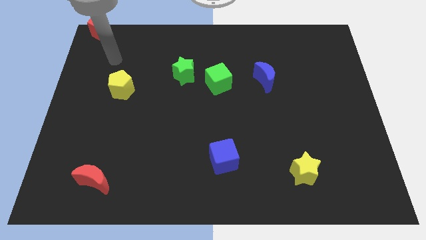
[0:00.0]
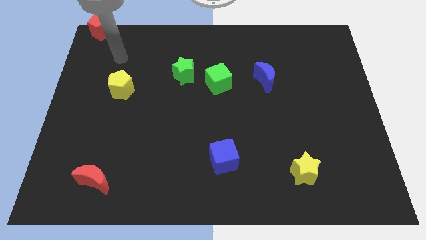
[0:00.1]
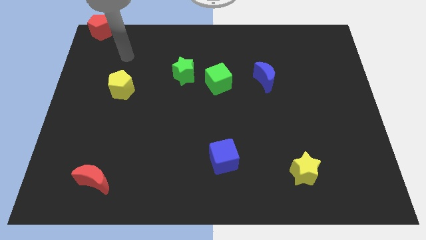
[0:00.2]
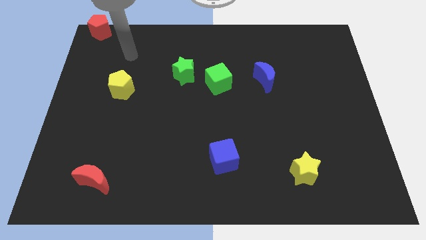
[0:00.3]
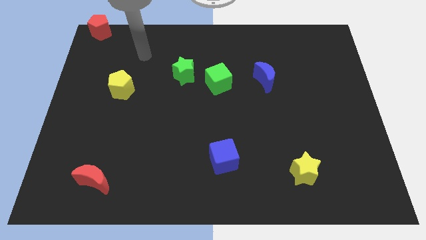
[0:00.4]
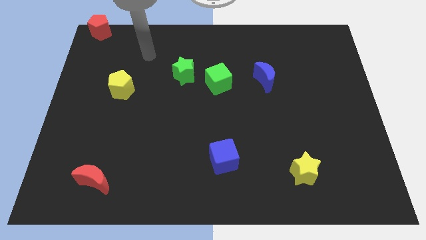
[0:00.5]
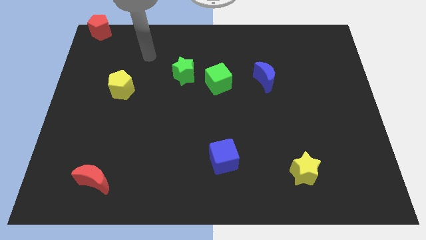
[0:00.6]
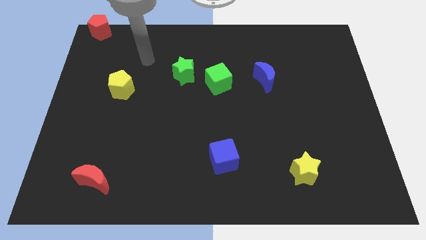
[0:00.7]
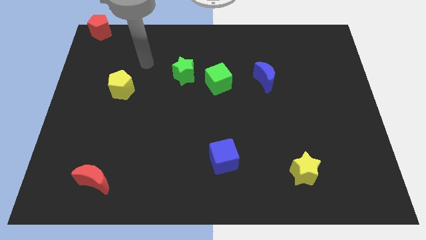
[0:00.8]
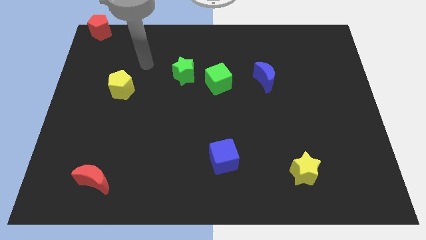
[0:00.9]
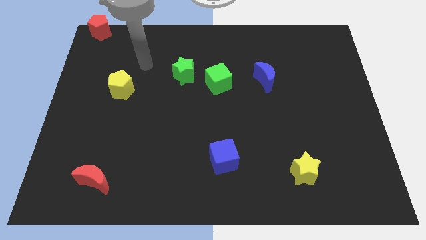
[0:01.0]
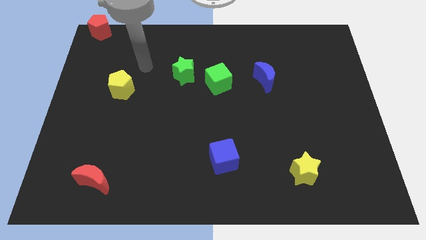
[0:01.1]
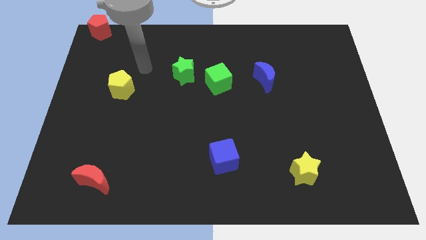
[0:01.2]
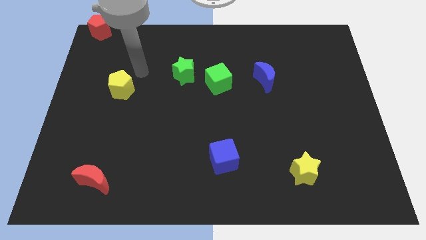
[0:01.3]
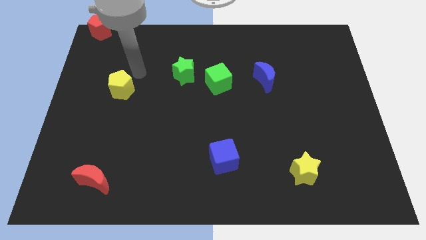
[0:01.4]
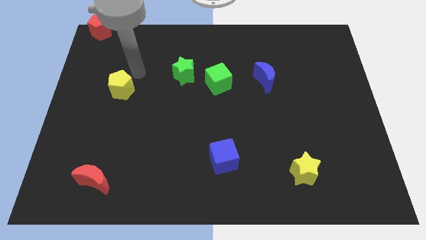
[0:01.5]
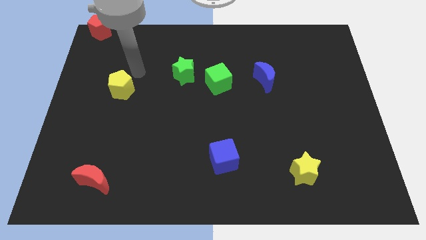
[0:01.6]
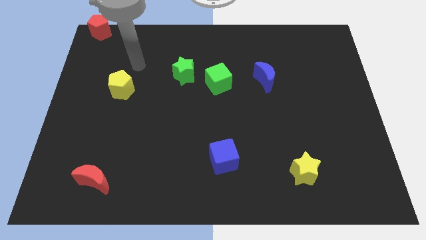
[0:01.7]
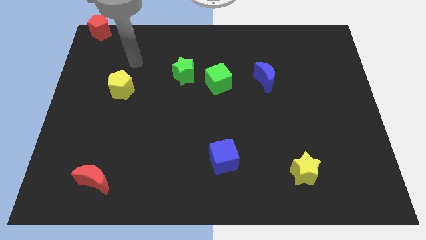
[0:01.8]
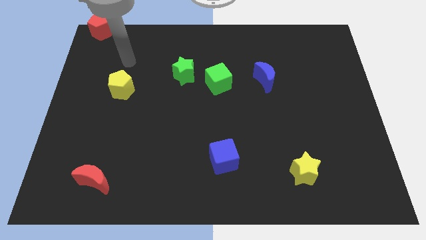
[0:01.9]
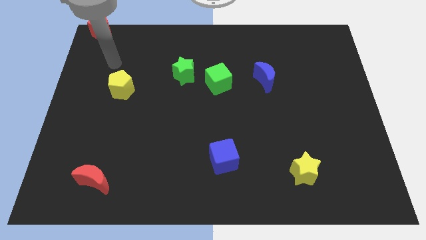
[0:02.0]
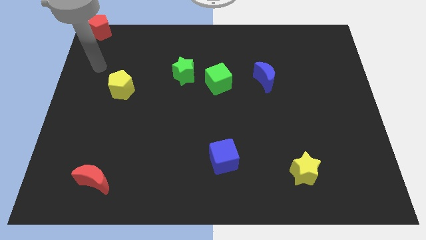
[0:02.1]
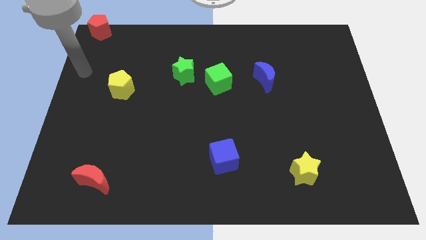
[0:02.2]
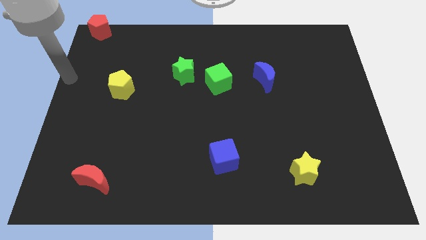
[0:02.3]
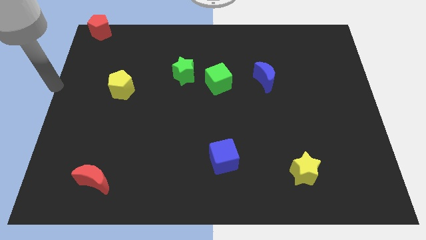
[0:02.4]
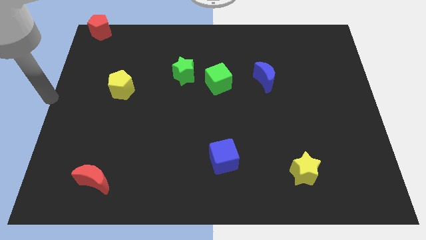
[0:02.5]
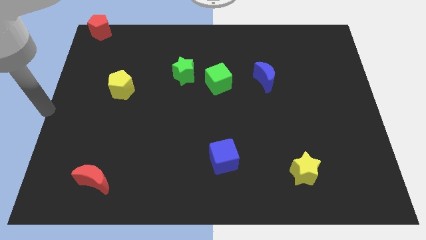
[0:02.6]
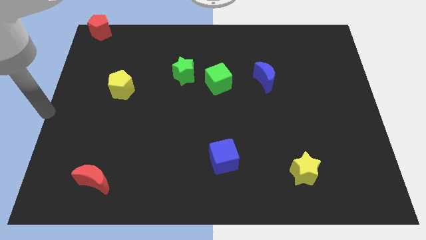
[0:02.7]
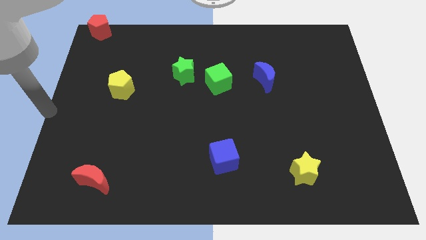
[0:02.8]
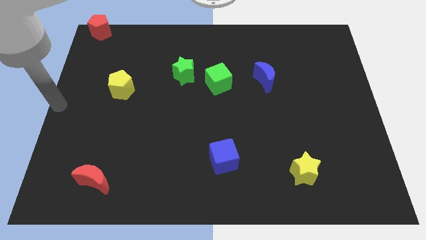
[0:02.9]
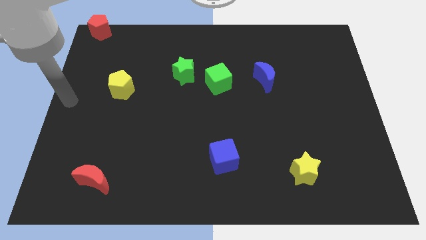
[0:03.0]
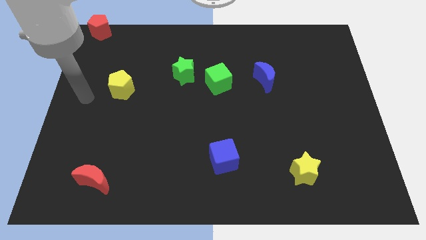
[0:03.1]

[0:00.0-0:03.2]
move the arm towards the yellow pentagon

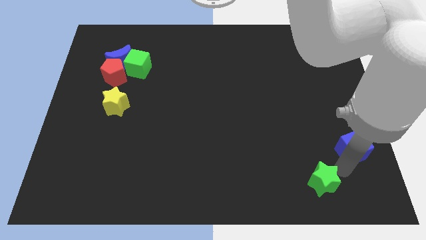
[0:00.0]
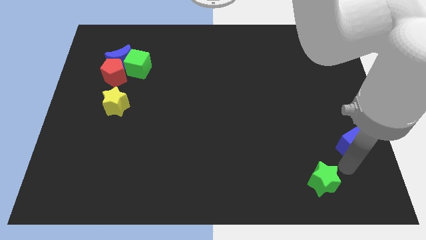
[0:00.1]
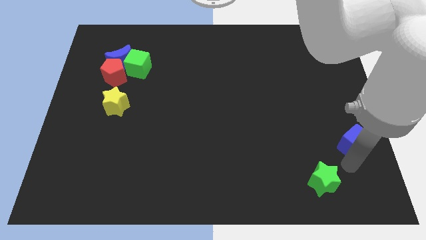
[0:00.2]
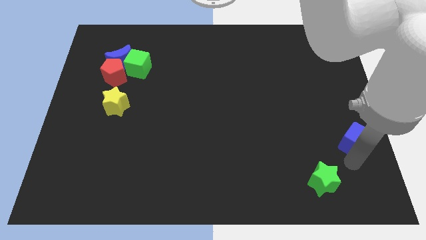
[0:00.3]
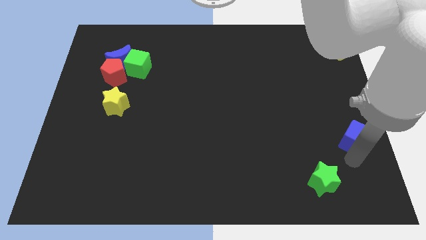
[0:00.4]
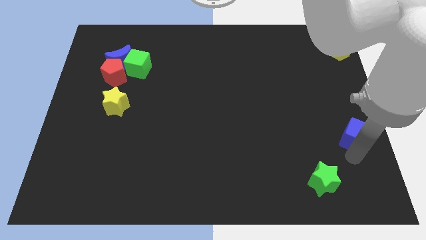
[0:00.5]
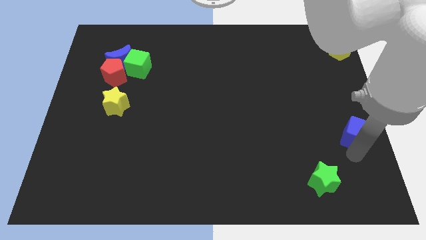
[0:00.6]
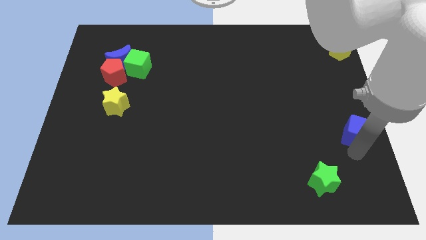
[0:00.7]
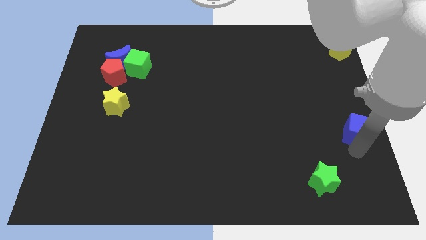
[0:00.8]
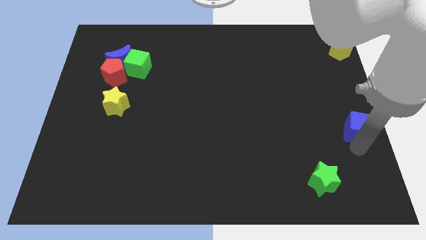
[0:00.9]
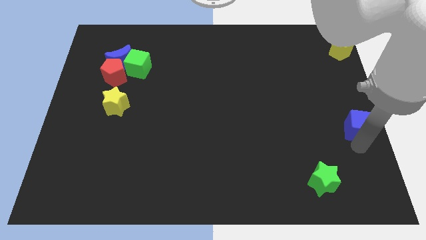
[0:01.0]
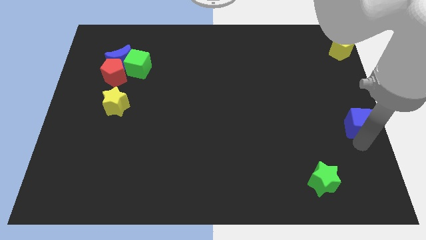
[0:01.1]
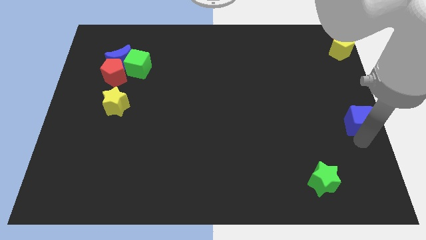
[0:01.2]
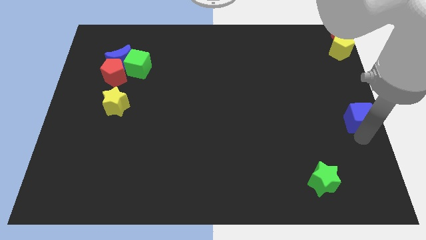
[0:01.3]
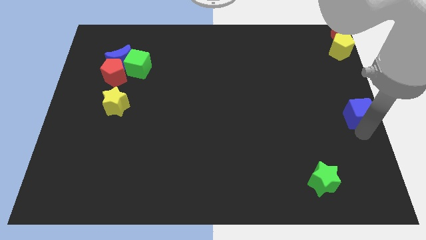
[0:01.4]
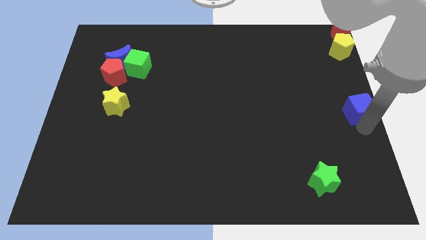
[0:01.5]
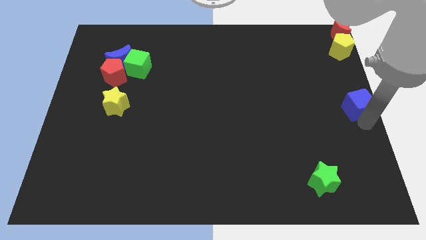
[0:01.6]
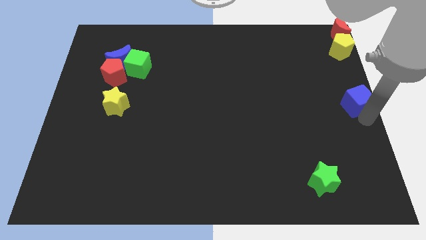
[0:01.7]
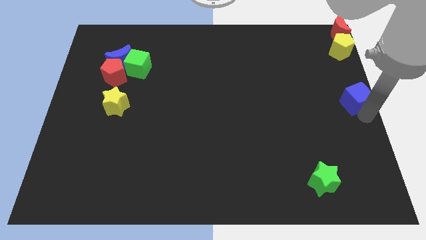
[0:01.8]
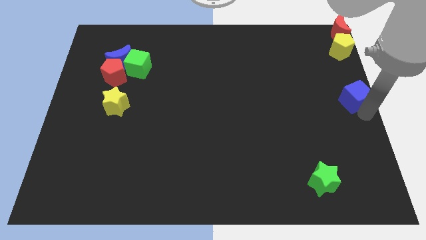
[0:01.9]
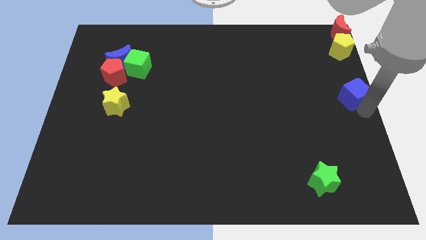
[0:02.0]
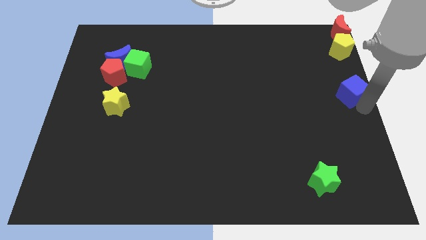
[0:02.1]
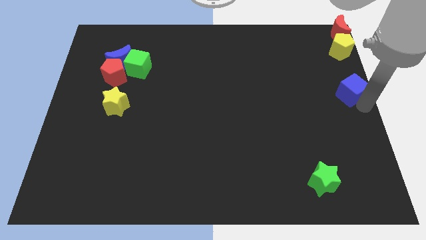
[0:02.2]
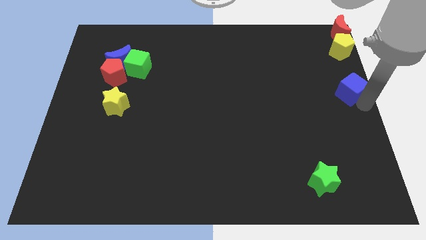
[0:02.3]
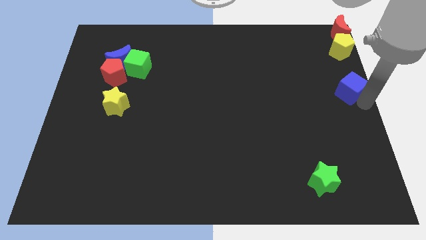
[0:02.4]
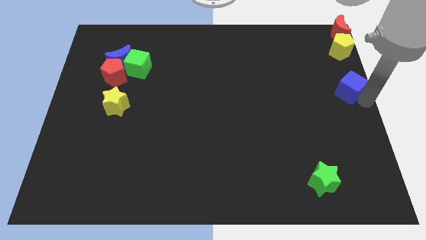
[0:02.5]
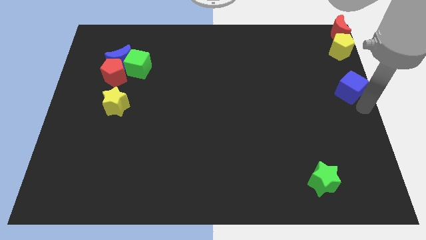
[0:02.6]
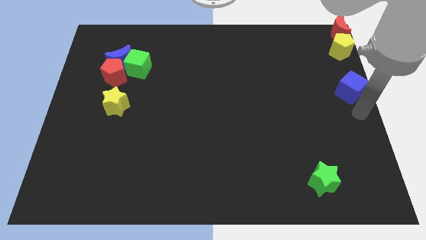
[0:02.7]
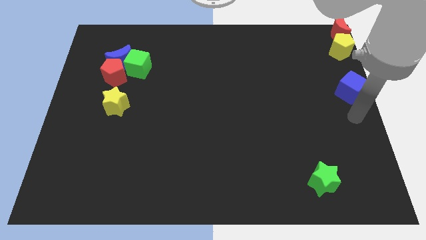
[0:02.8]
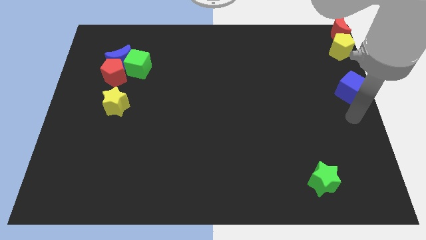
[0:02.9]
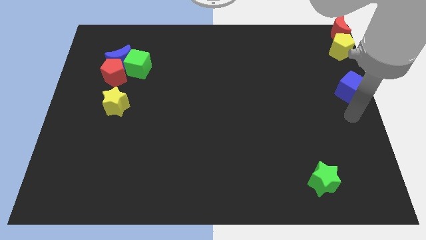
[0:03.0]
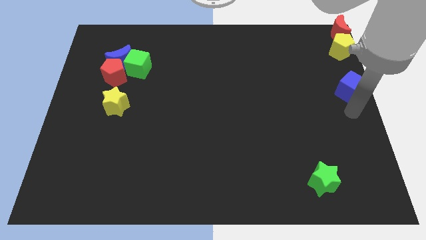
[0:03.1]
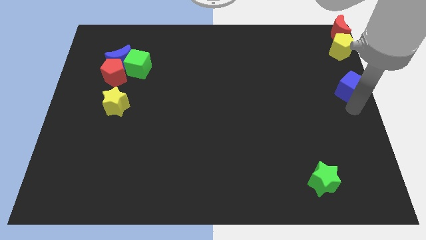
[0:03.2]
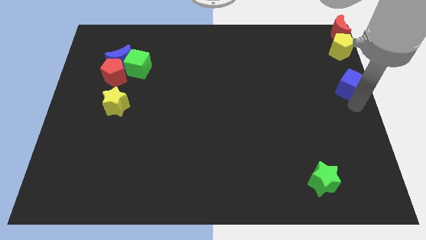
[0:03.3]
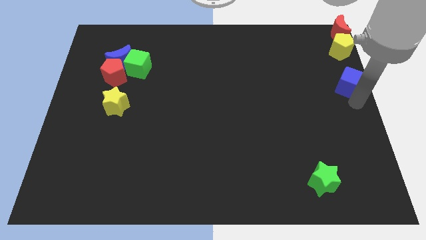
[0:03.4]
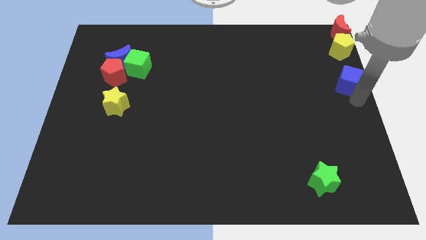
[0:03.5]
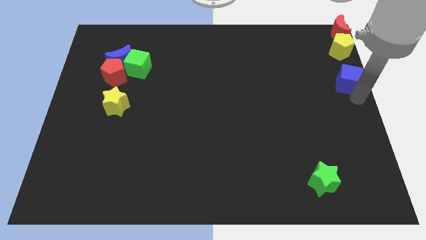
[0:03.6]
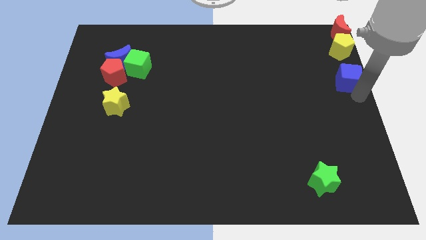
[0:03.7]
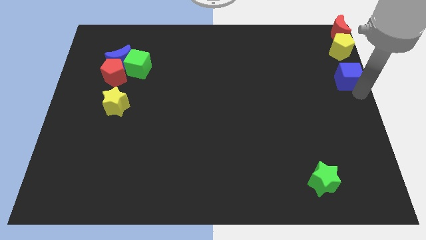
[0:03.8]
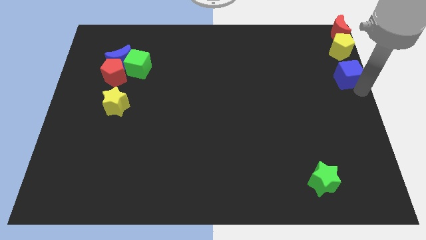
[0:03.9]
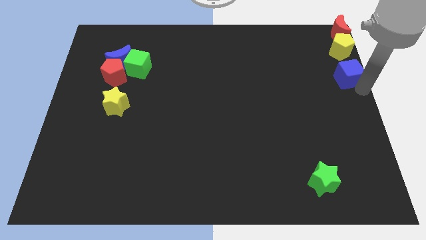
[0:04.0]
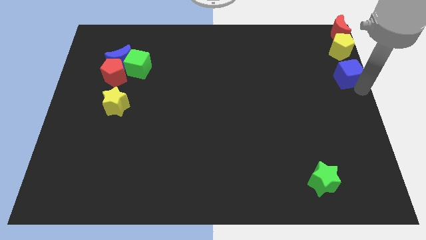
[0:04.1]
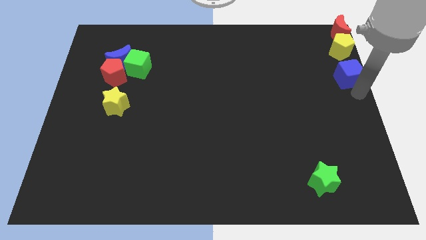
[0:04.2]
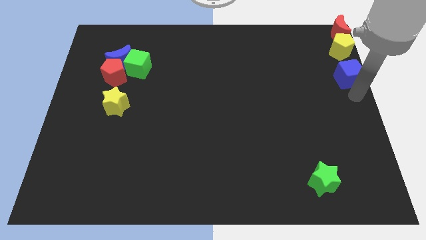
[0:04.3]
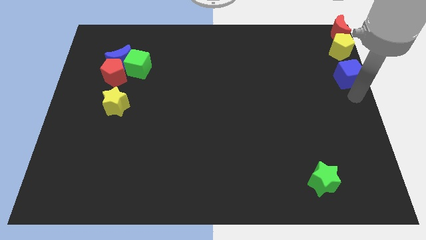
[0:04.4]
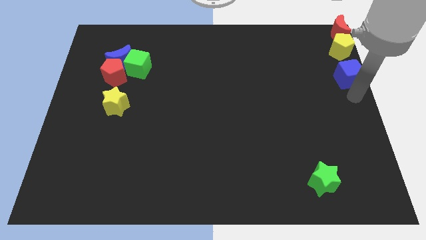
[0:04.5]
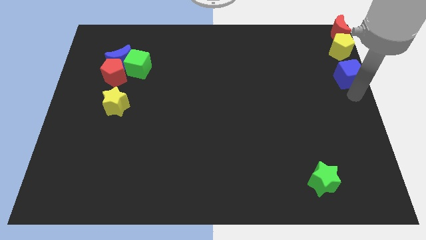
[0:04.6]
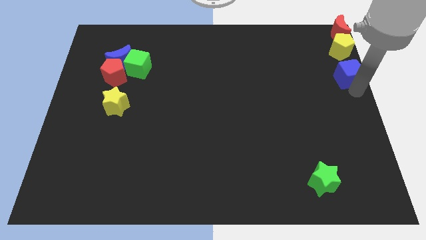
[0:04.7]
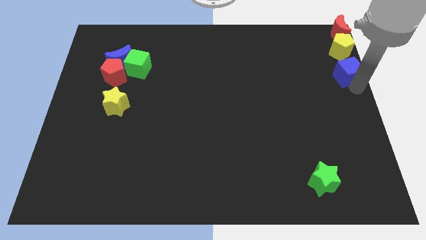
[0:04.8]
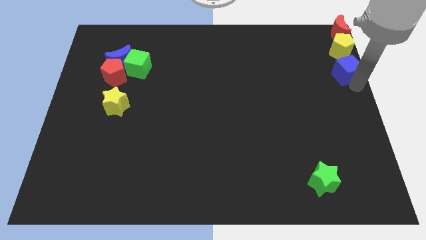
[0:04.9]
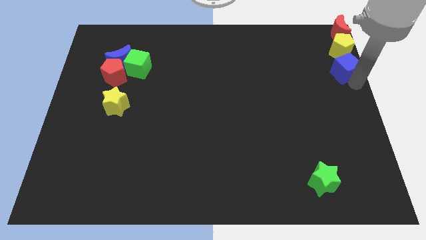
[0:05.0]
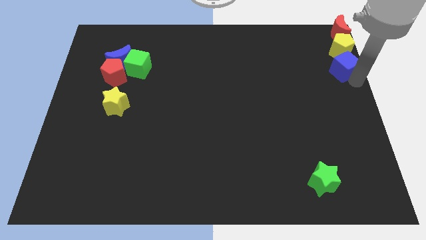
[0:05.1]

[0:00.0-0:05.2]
place the blue cube down to the yellow pentagon

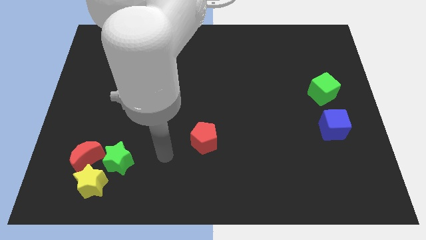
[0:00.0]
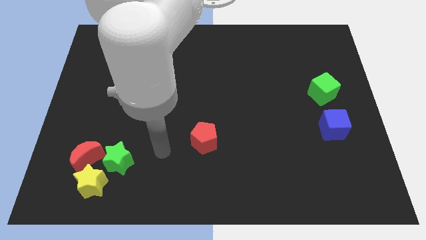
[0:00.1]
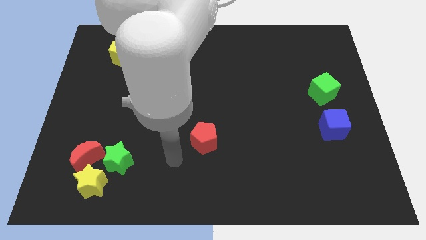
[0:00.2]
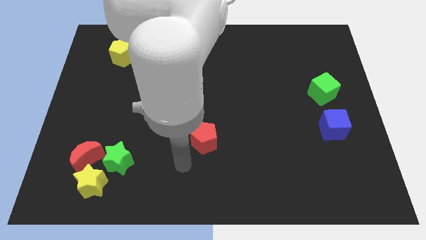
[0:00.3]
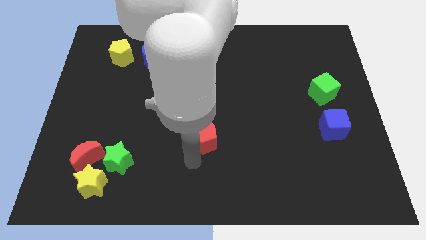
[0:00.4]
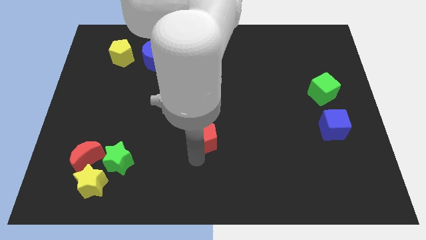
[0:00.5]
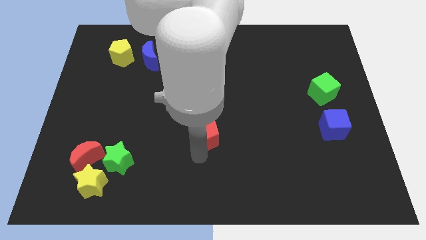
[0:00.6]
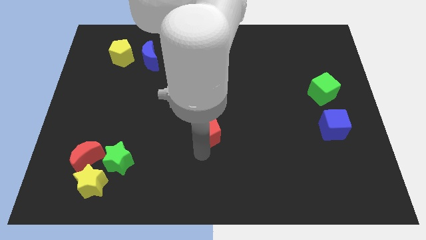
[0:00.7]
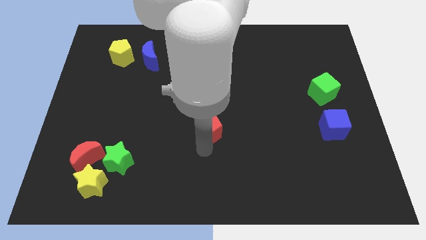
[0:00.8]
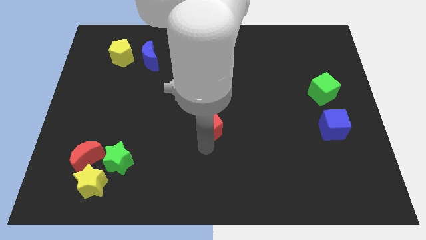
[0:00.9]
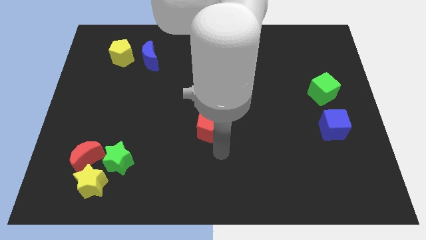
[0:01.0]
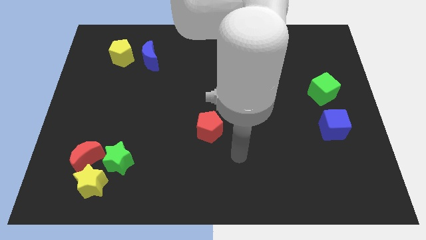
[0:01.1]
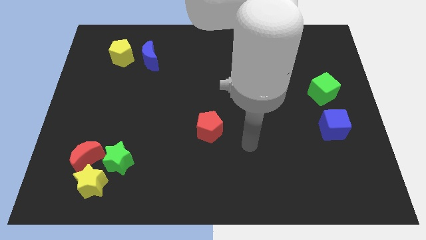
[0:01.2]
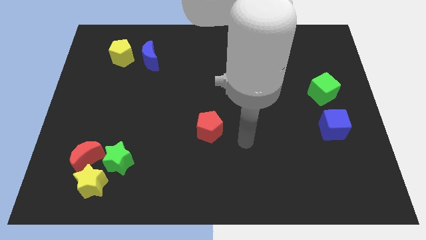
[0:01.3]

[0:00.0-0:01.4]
push red pentagon slightly to the top side of the board
